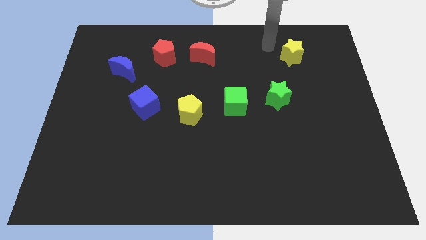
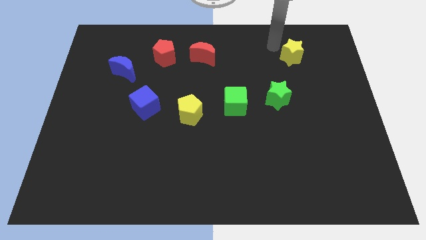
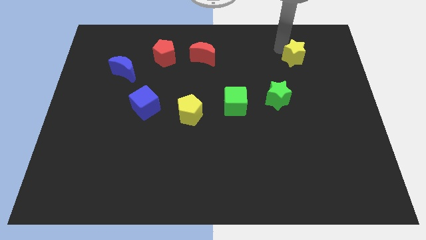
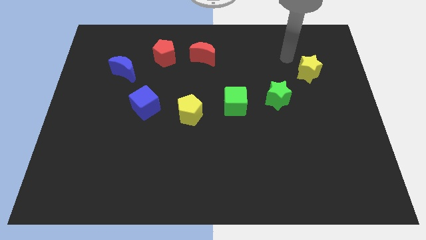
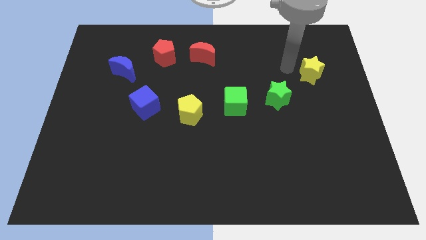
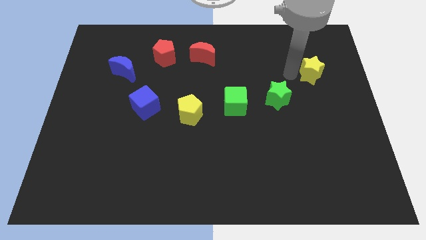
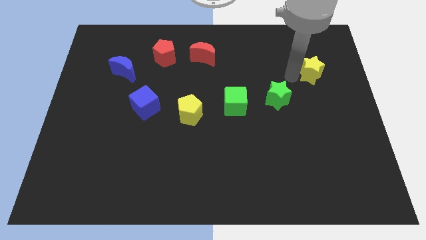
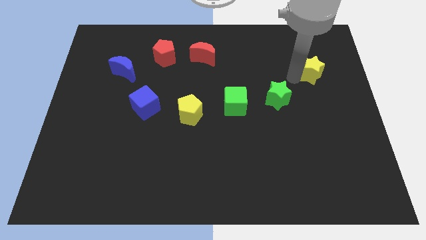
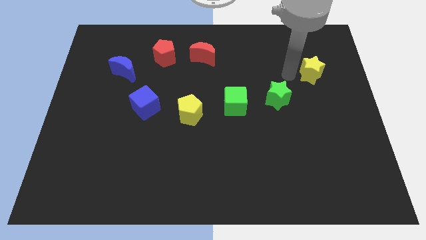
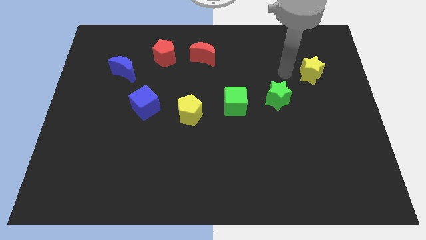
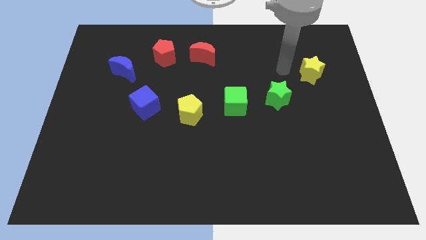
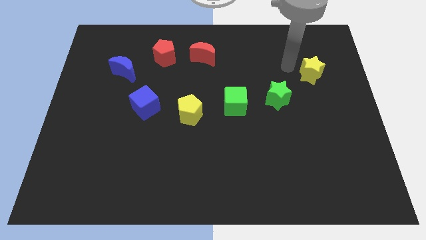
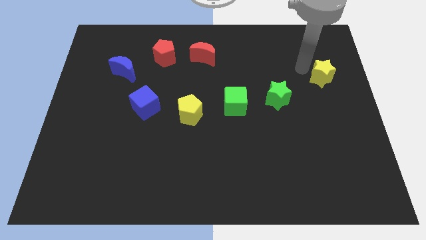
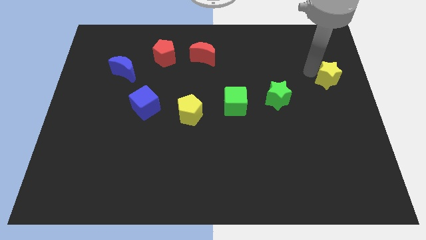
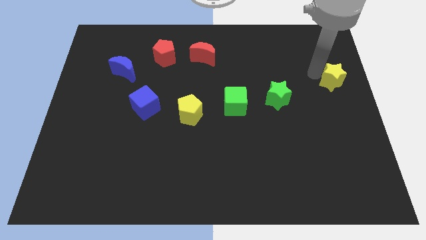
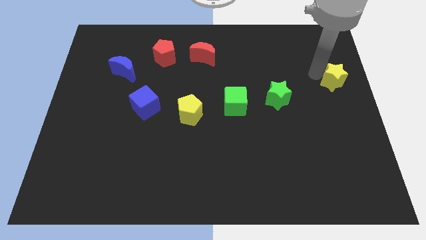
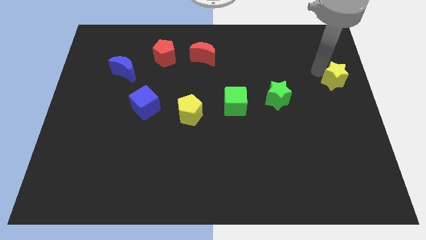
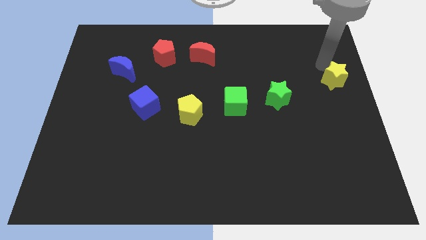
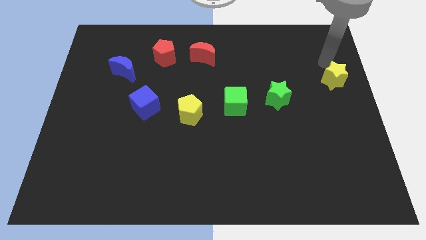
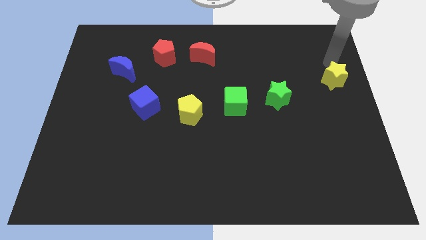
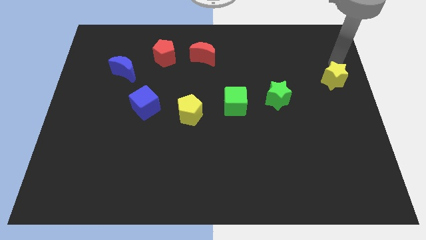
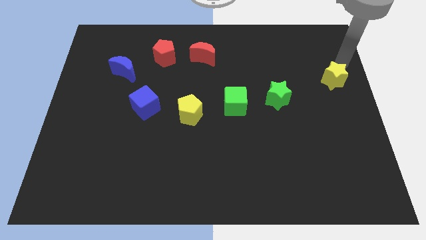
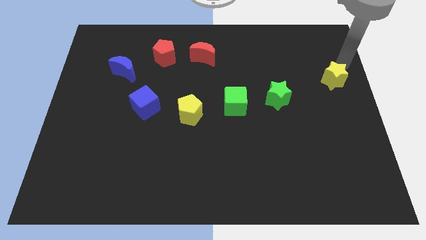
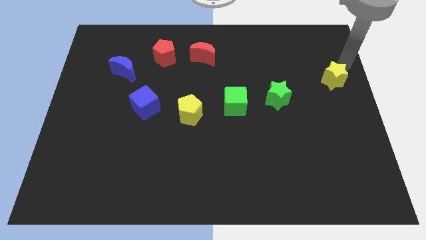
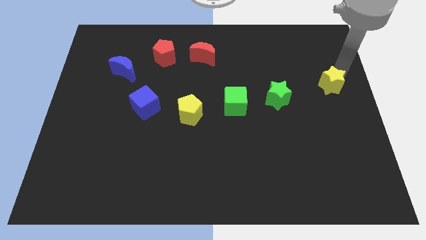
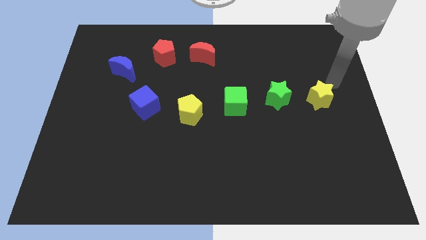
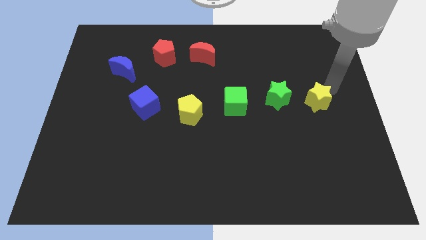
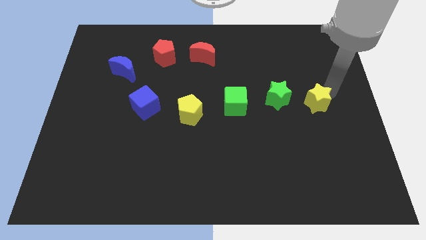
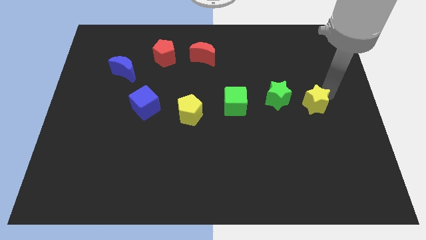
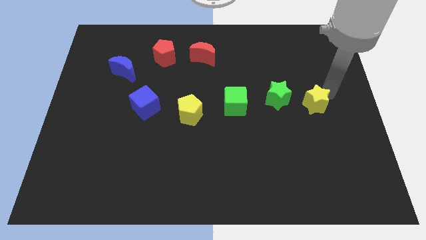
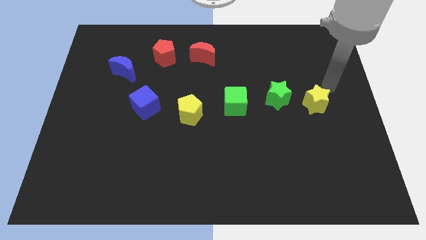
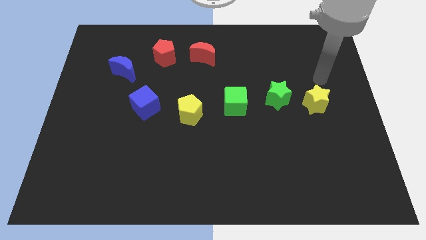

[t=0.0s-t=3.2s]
place yellow star to the right of green star

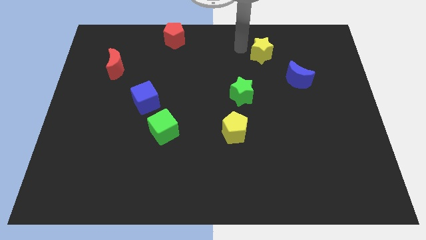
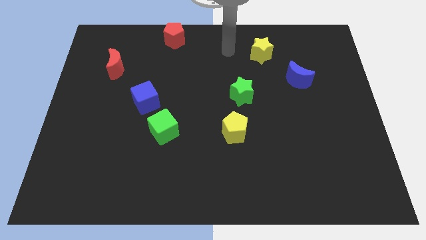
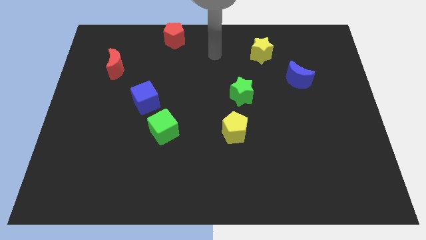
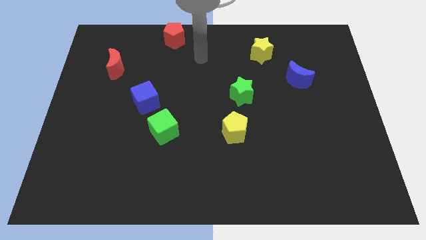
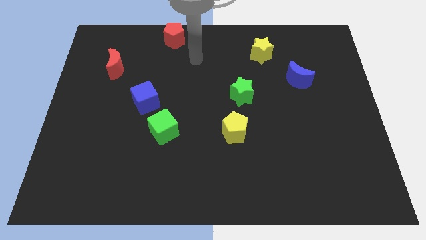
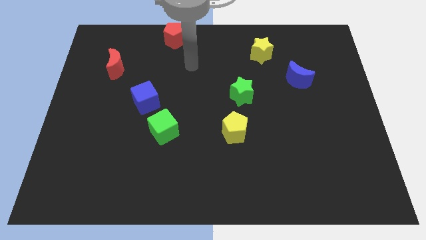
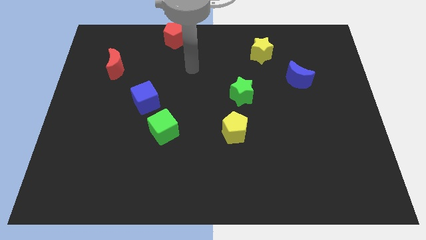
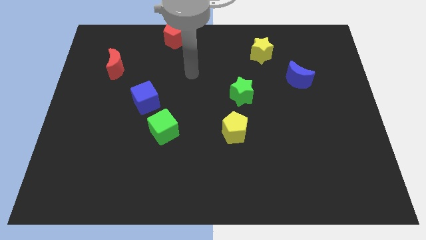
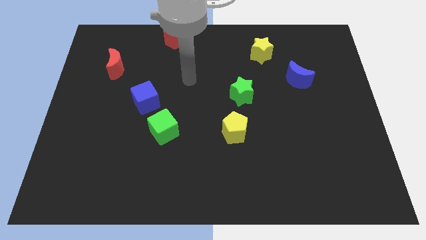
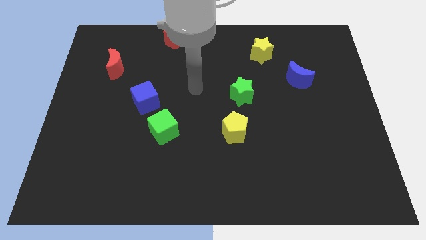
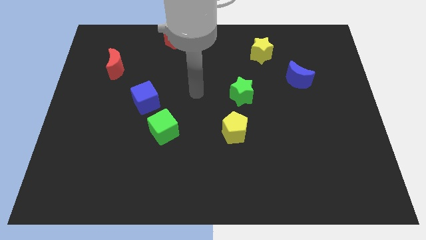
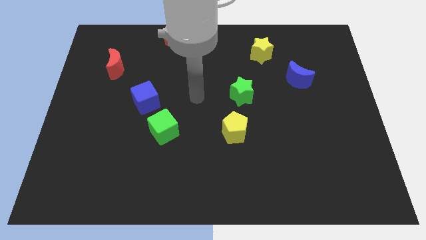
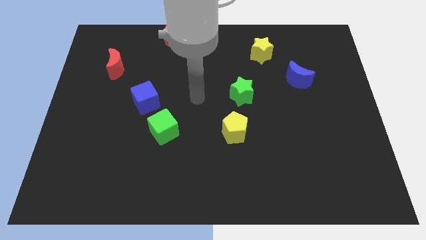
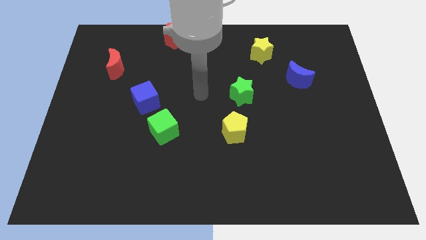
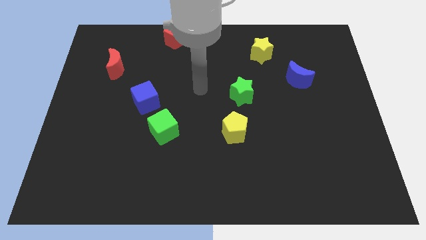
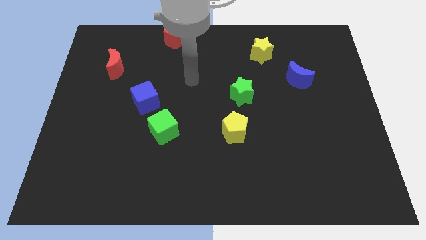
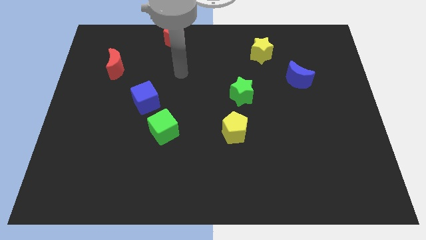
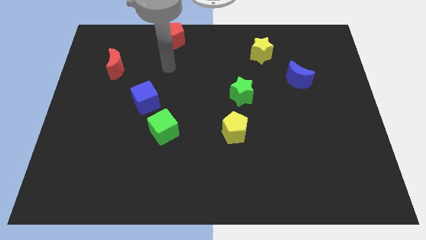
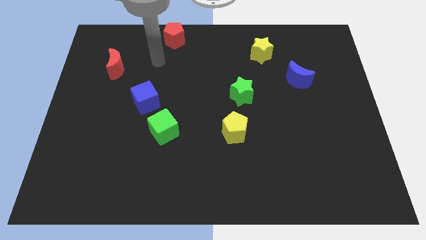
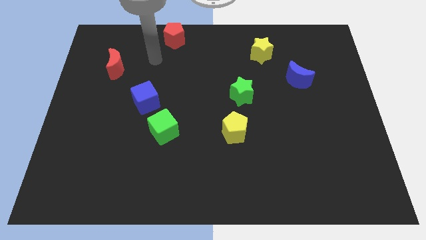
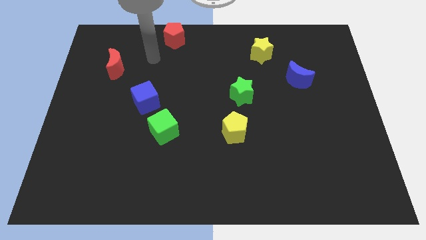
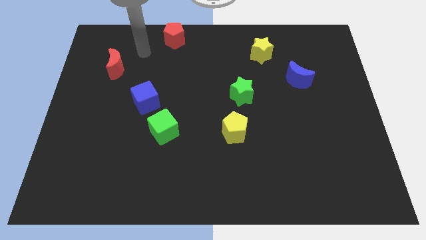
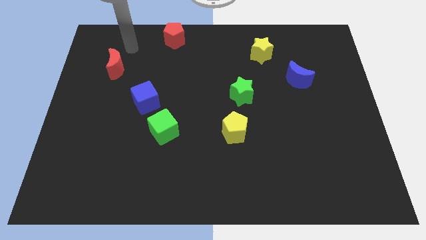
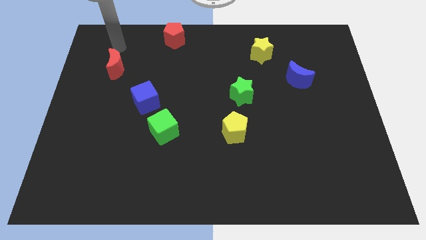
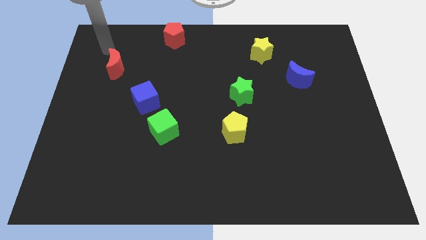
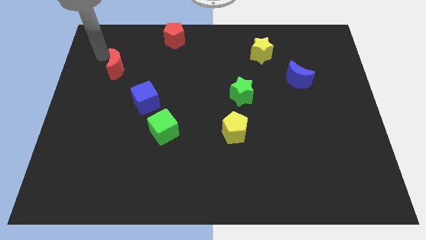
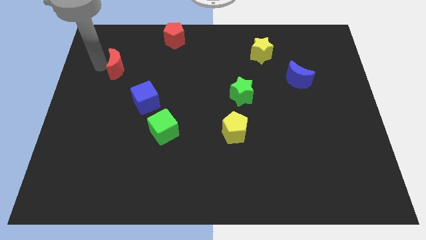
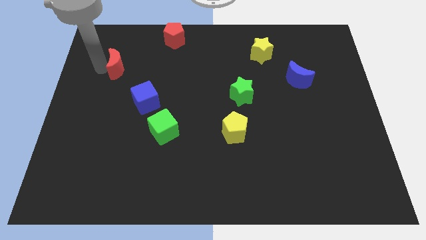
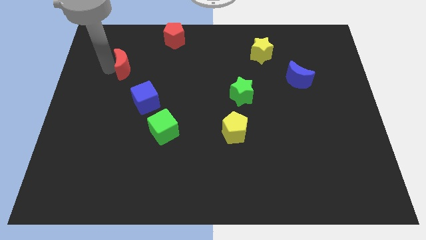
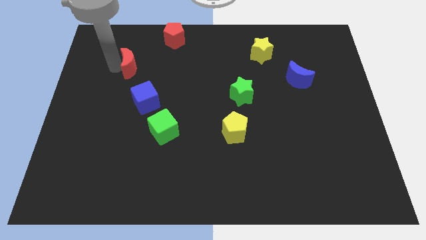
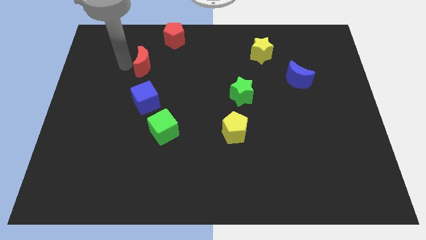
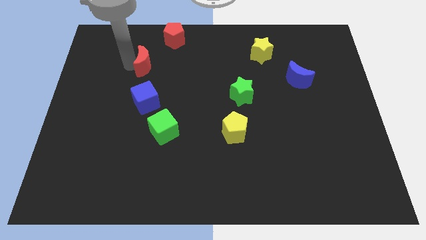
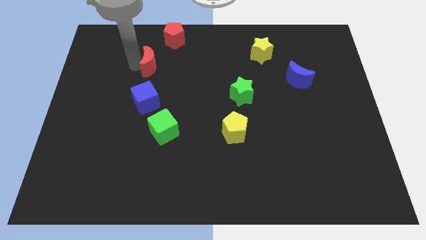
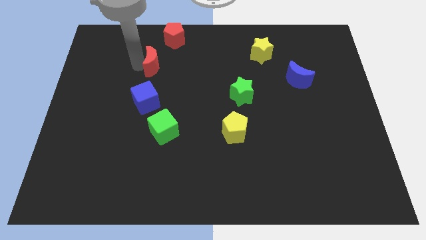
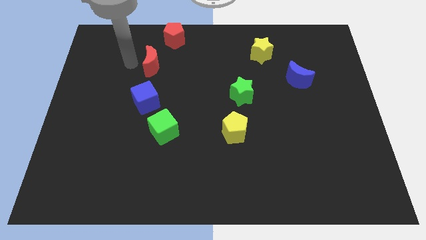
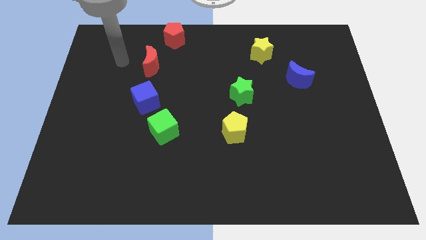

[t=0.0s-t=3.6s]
move the red crescent above the blue cube

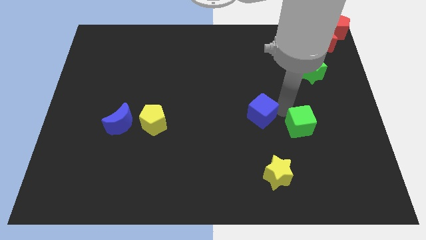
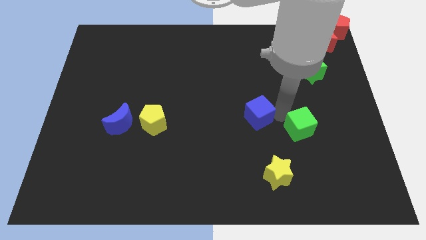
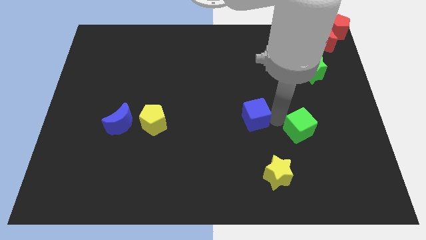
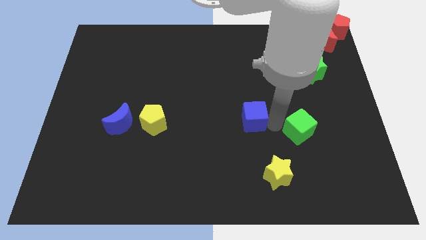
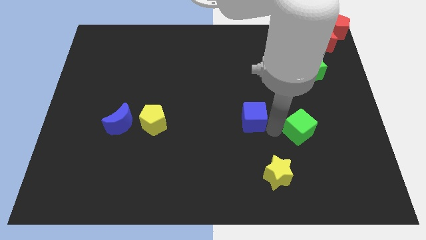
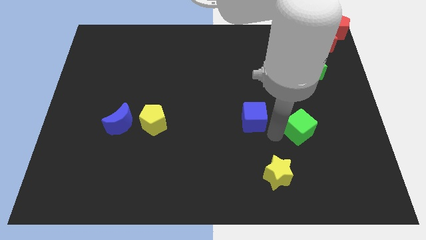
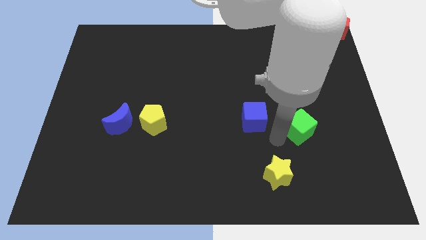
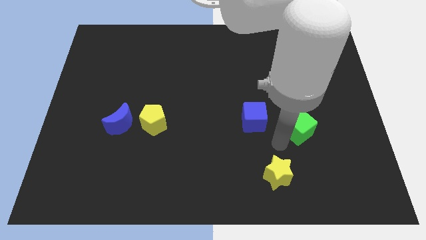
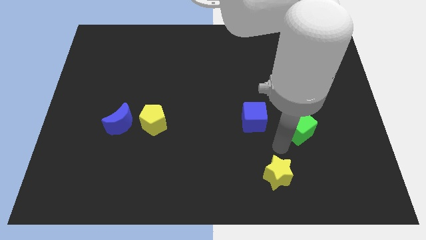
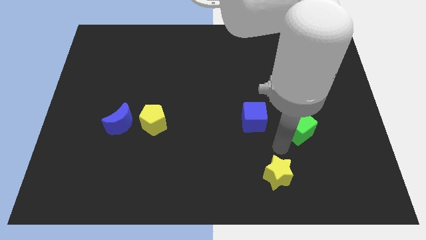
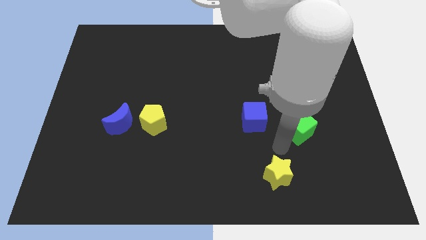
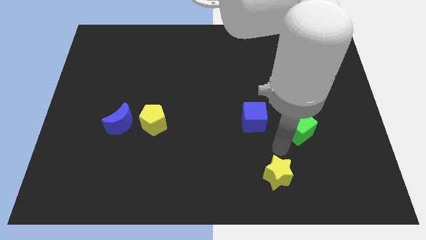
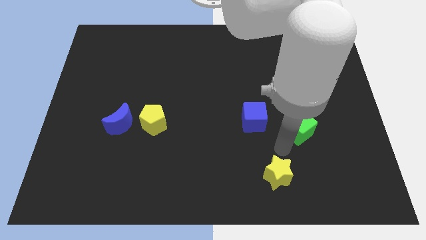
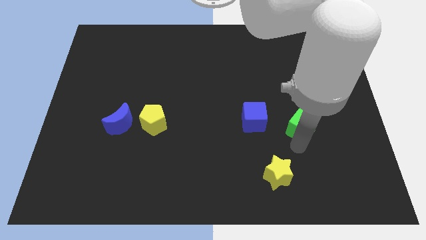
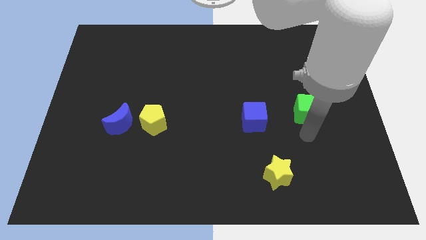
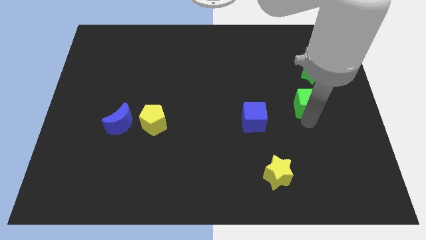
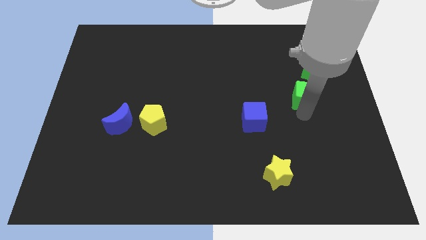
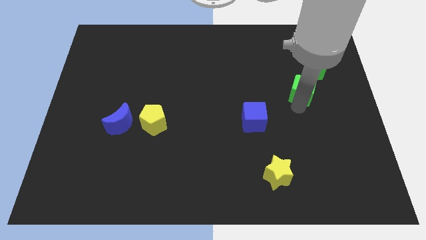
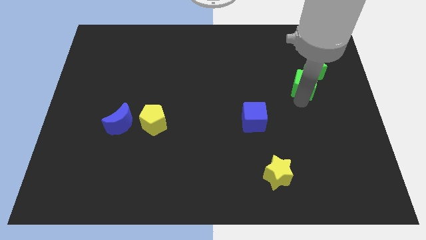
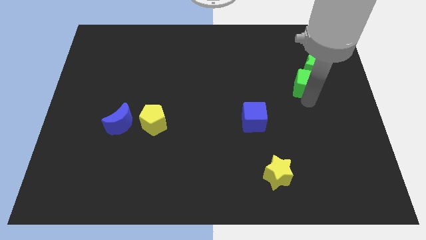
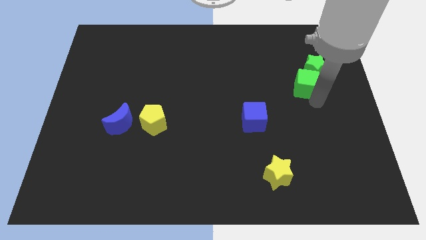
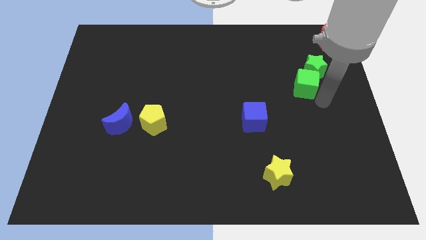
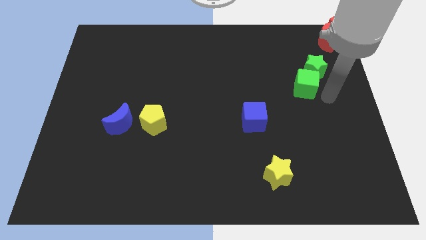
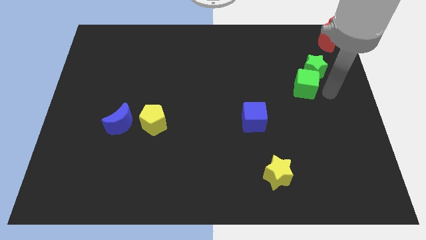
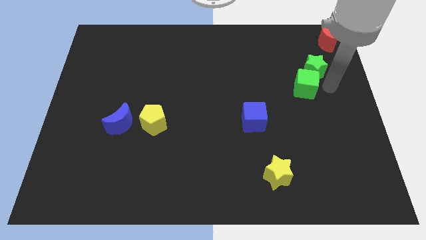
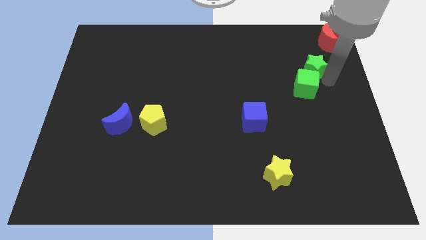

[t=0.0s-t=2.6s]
move green cube into green star
